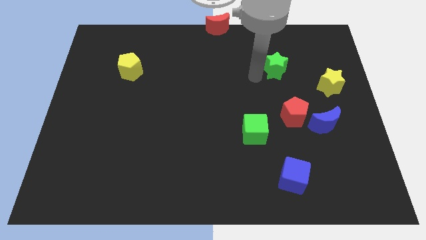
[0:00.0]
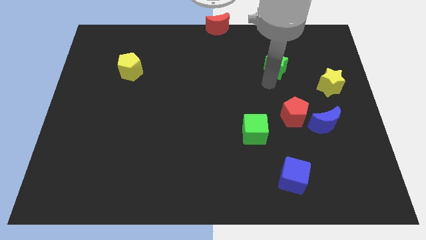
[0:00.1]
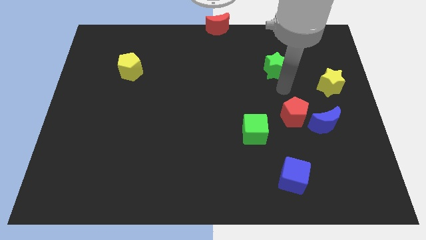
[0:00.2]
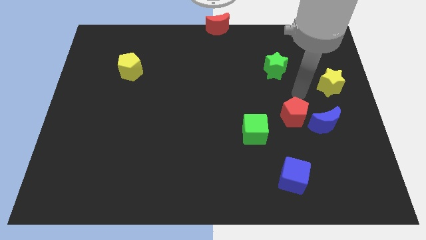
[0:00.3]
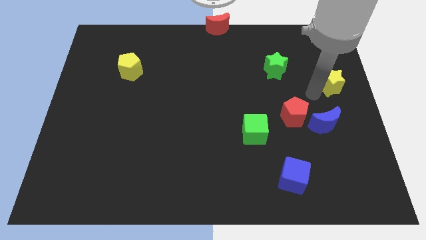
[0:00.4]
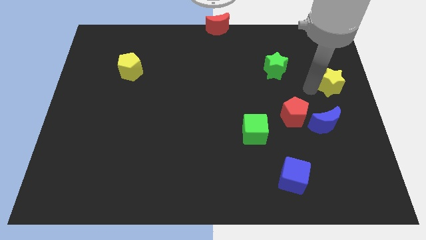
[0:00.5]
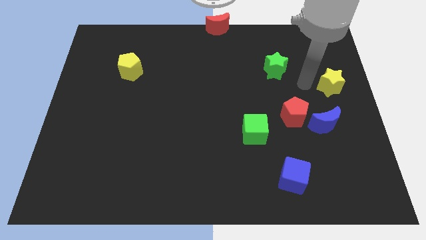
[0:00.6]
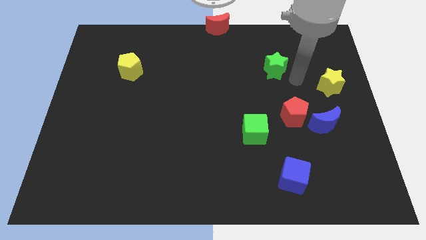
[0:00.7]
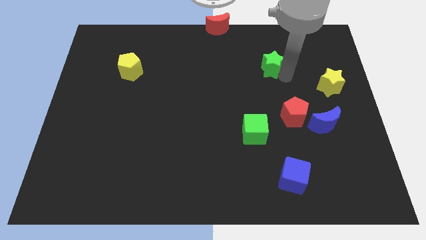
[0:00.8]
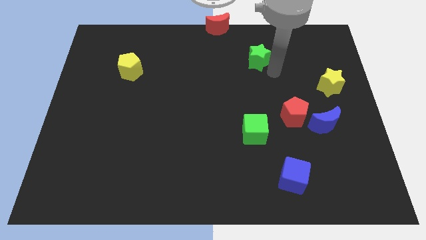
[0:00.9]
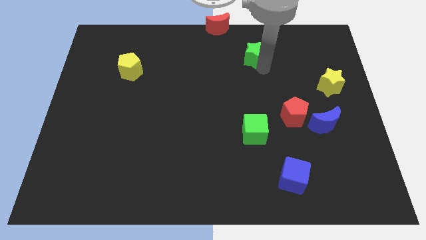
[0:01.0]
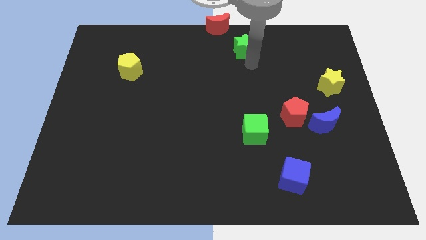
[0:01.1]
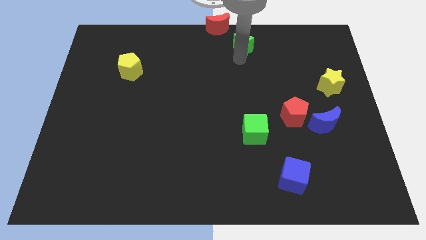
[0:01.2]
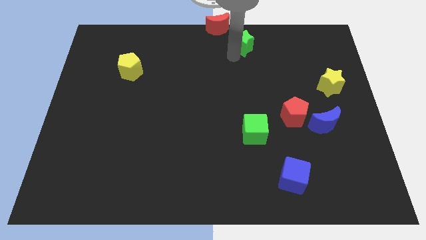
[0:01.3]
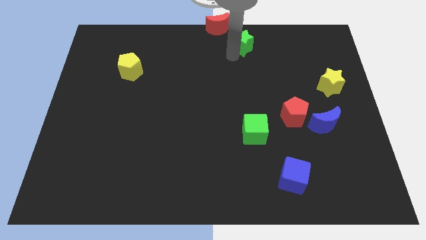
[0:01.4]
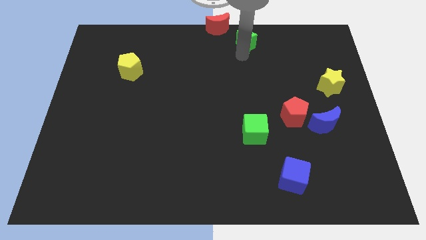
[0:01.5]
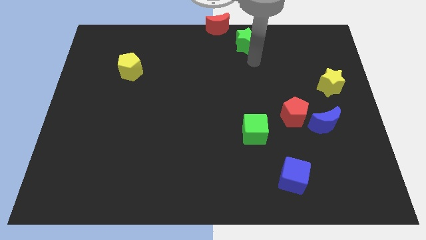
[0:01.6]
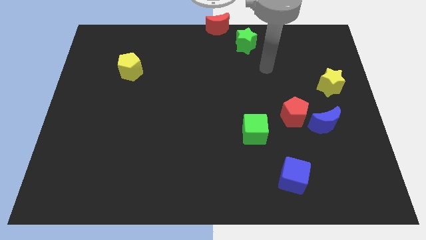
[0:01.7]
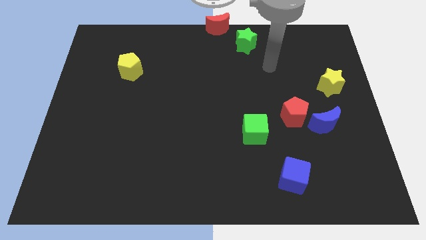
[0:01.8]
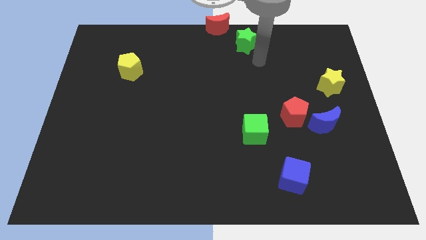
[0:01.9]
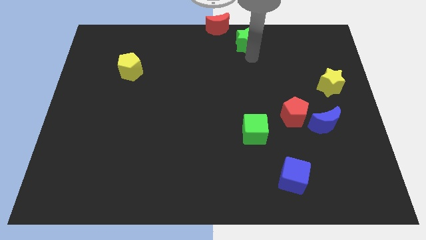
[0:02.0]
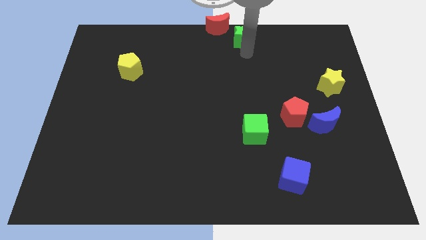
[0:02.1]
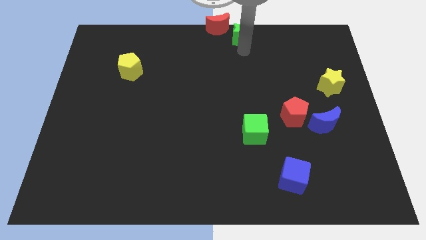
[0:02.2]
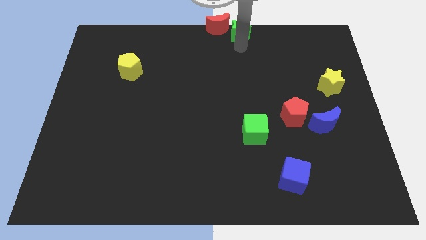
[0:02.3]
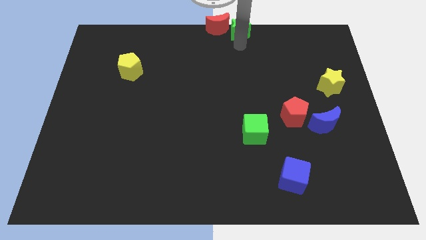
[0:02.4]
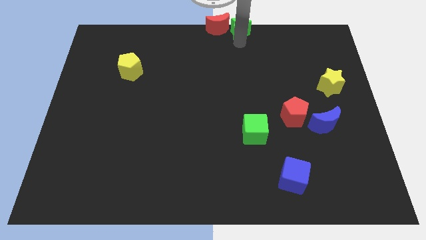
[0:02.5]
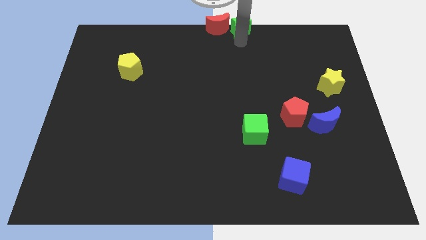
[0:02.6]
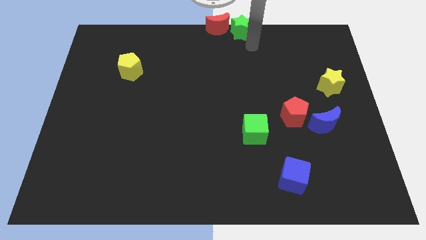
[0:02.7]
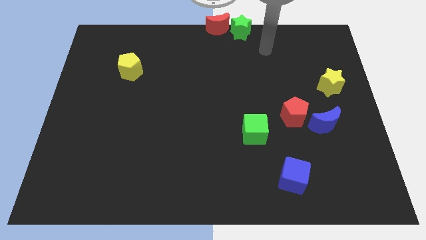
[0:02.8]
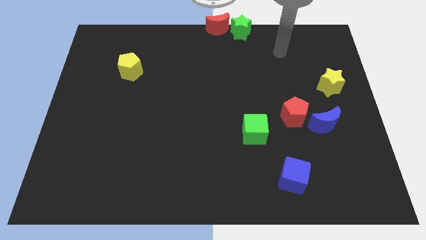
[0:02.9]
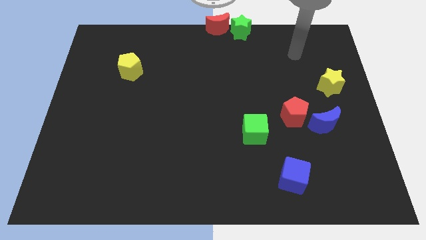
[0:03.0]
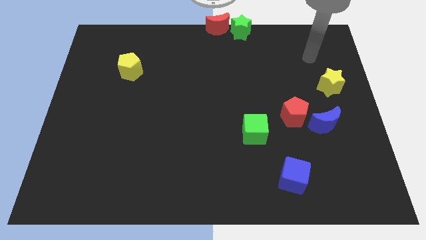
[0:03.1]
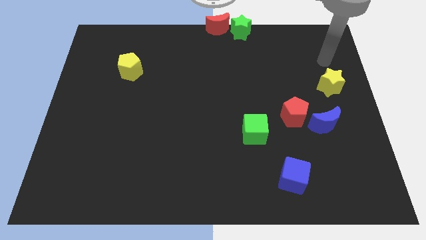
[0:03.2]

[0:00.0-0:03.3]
place the green star to the right side of the red moon

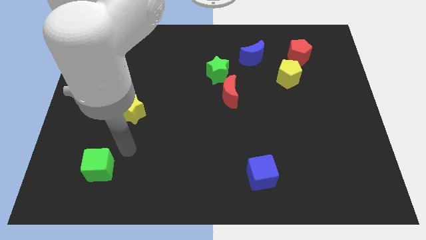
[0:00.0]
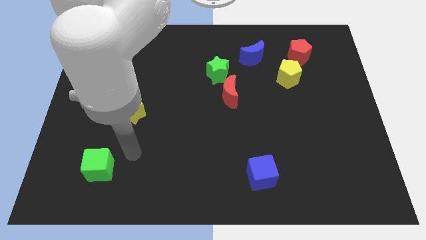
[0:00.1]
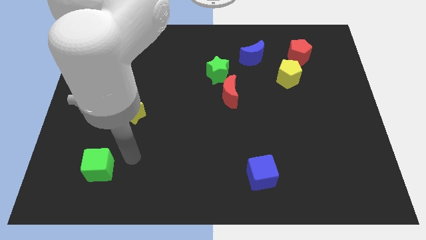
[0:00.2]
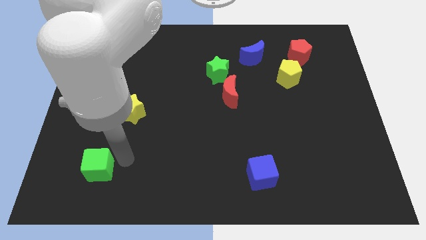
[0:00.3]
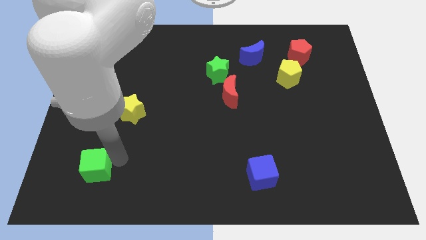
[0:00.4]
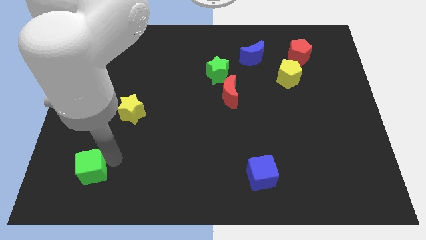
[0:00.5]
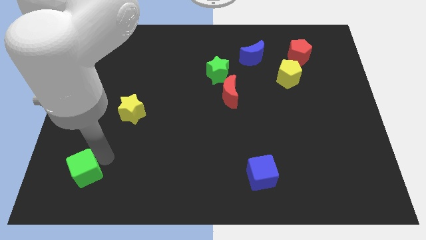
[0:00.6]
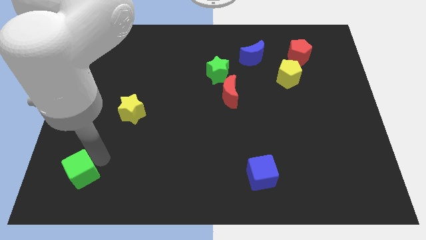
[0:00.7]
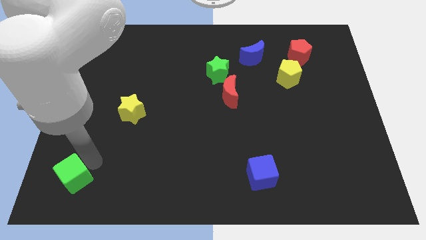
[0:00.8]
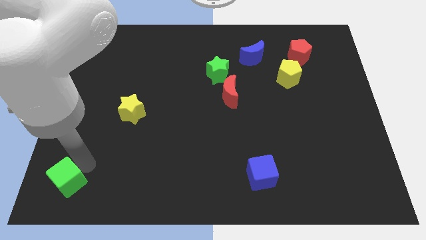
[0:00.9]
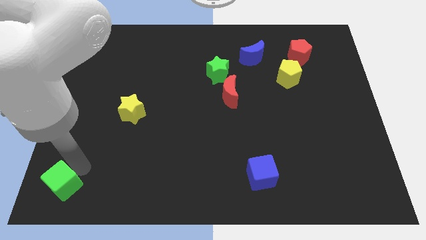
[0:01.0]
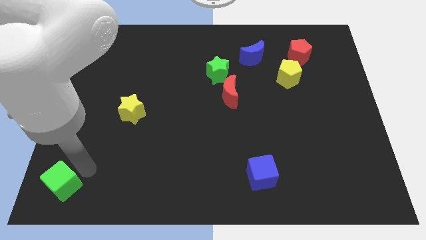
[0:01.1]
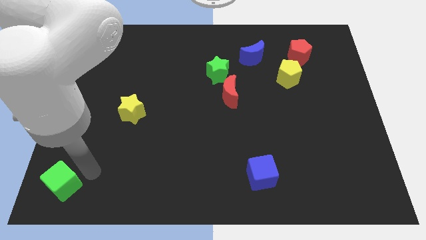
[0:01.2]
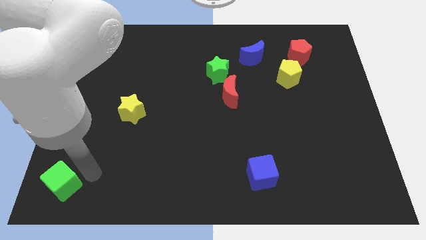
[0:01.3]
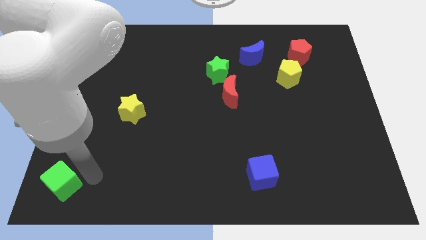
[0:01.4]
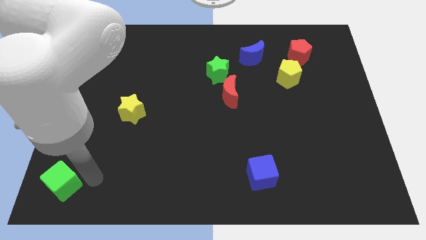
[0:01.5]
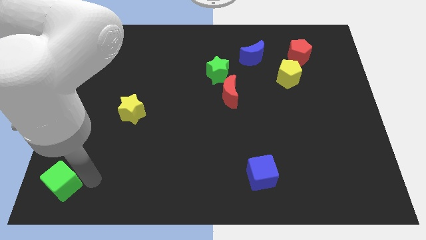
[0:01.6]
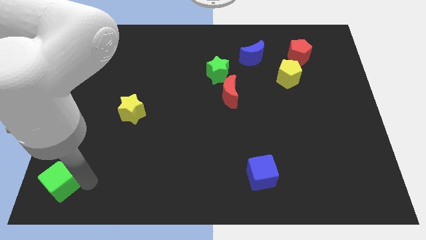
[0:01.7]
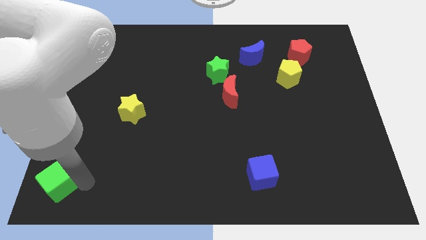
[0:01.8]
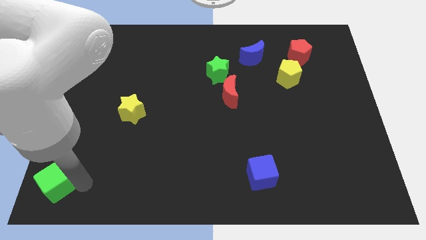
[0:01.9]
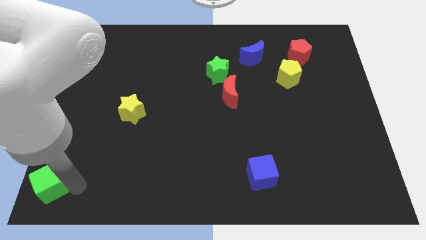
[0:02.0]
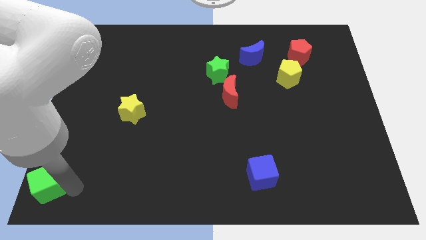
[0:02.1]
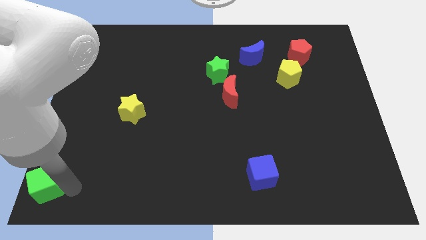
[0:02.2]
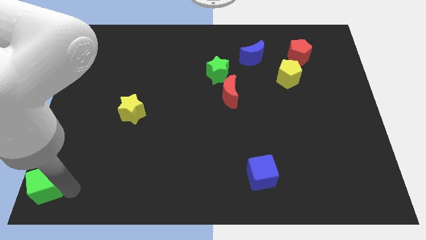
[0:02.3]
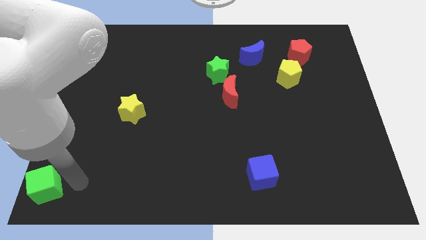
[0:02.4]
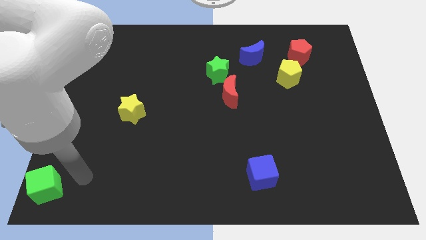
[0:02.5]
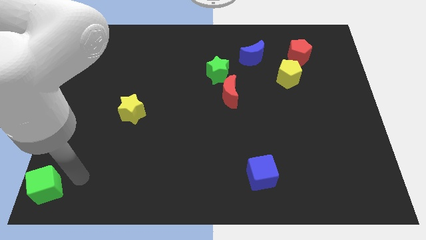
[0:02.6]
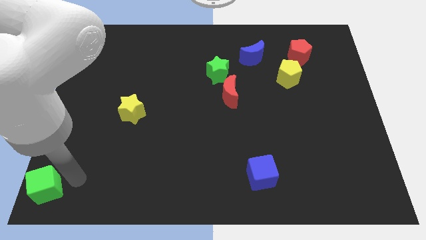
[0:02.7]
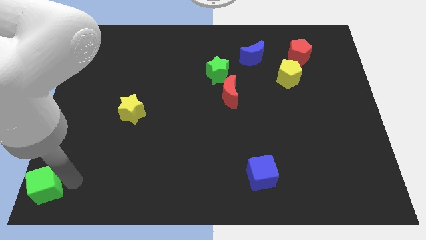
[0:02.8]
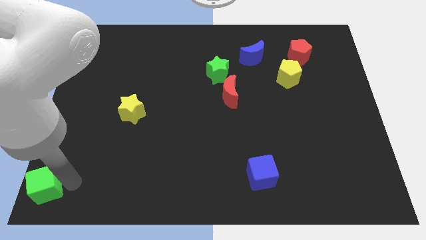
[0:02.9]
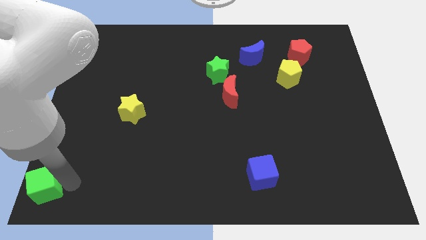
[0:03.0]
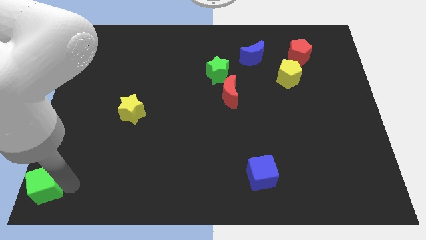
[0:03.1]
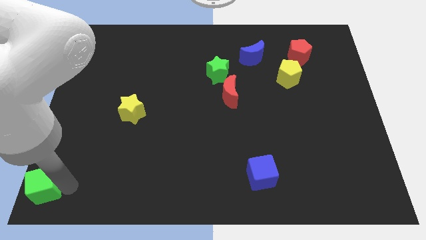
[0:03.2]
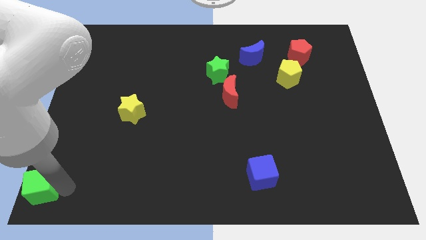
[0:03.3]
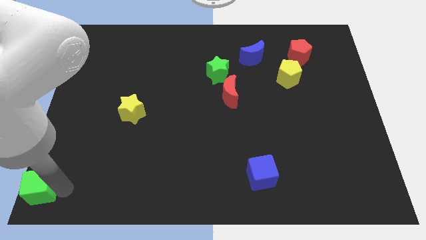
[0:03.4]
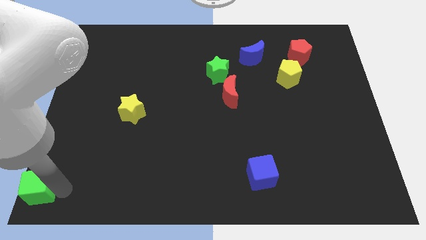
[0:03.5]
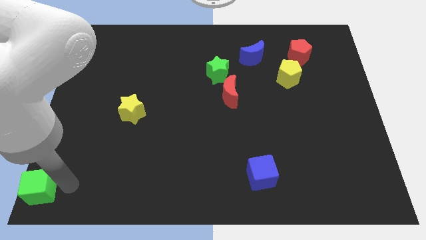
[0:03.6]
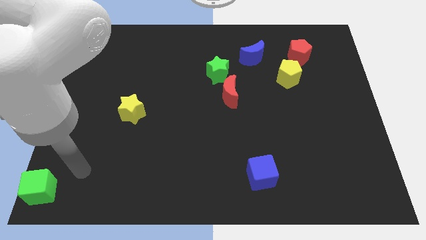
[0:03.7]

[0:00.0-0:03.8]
move green cube to bottom left corner

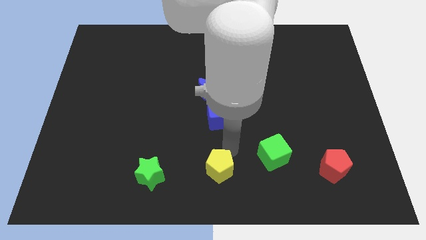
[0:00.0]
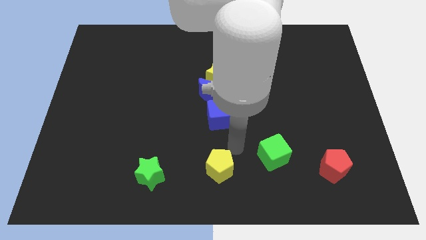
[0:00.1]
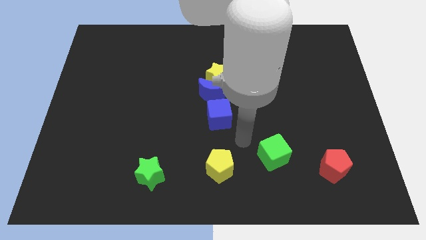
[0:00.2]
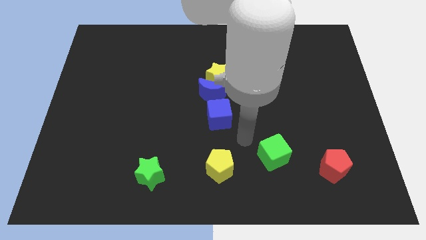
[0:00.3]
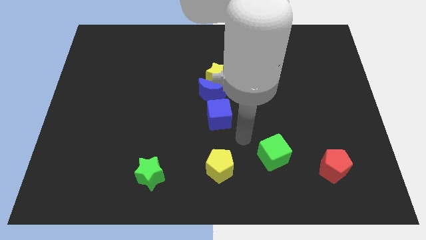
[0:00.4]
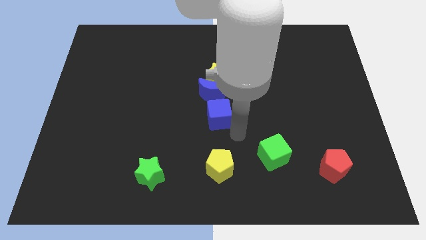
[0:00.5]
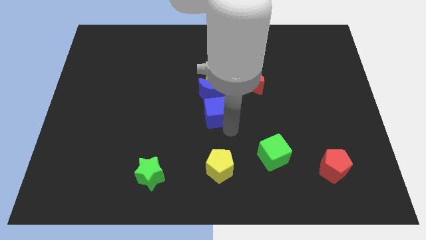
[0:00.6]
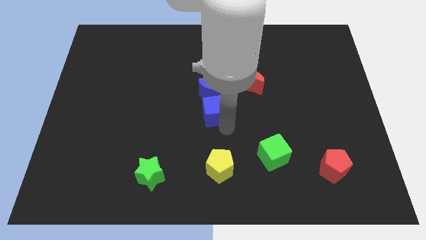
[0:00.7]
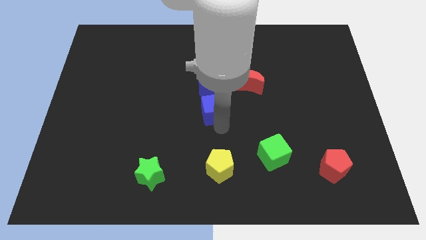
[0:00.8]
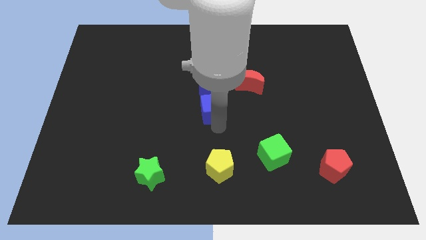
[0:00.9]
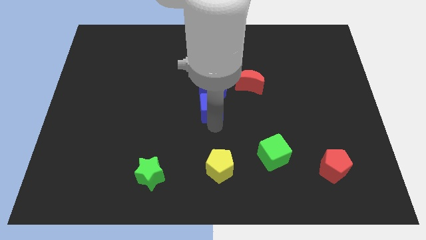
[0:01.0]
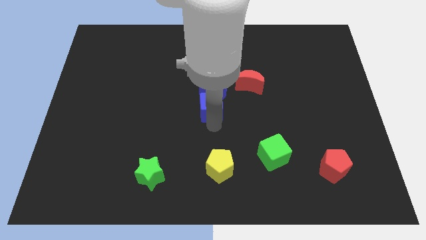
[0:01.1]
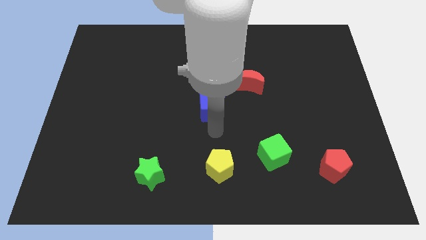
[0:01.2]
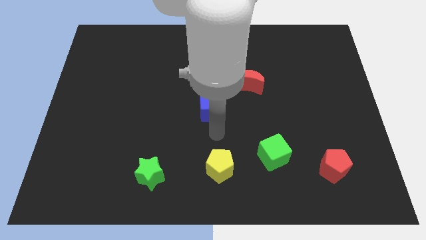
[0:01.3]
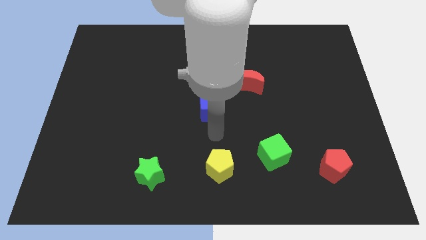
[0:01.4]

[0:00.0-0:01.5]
attach blue cube to the blue moon

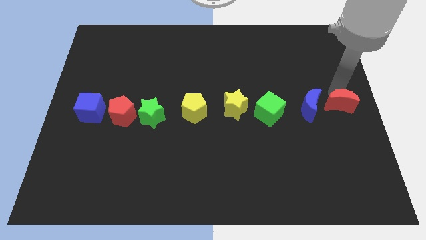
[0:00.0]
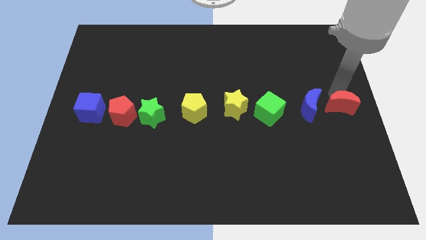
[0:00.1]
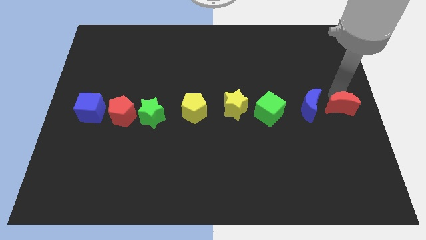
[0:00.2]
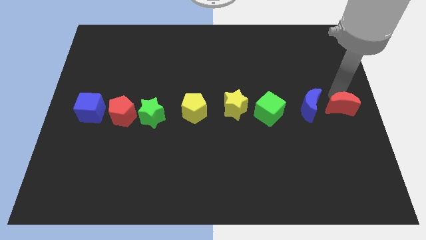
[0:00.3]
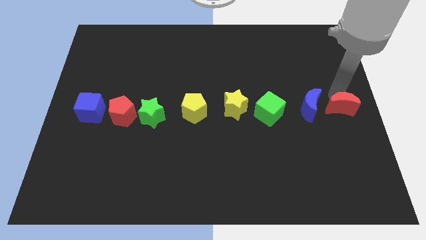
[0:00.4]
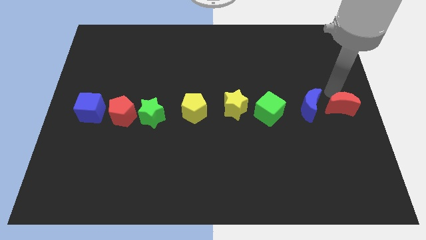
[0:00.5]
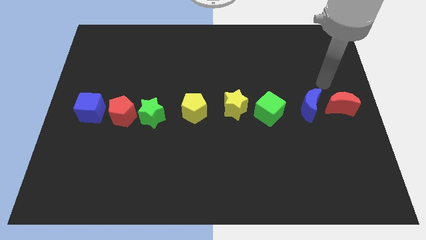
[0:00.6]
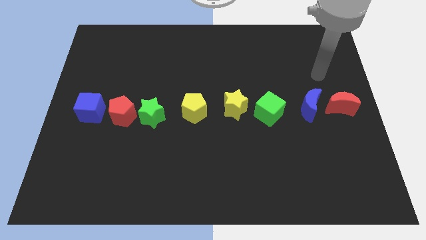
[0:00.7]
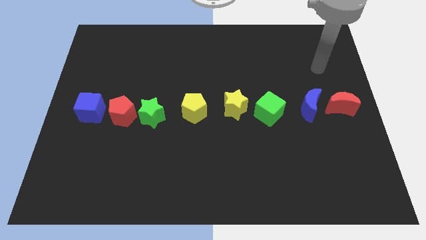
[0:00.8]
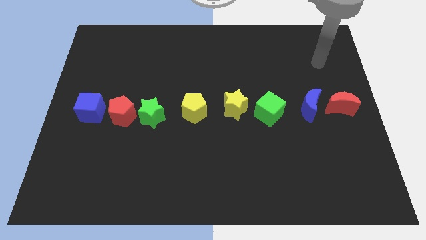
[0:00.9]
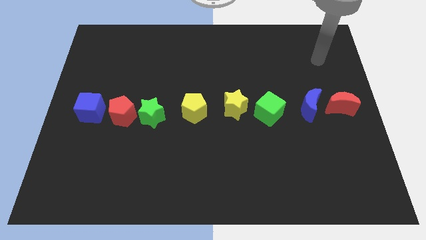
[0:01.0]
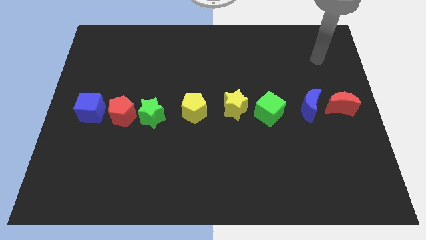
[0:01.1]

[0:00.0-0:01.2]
move your hand away from the red crescent
